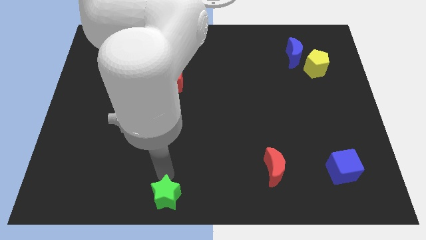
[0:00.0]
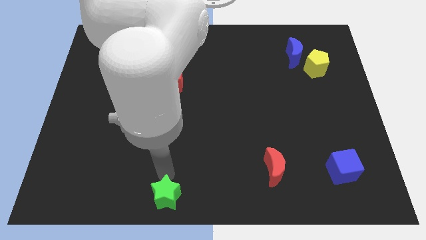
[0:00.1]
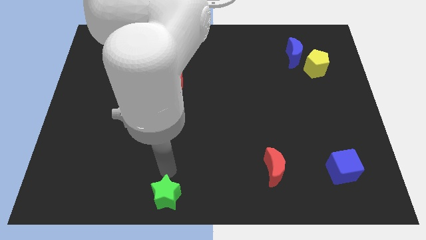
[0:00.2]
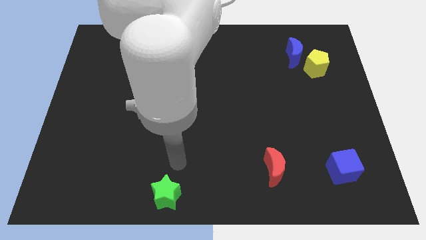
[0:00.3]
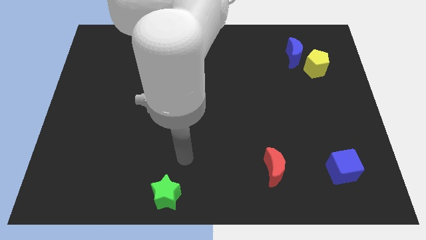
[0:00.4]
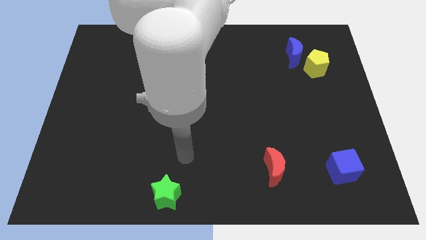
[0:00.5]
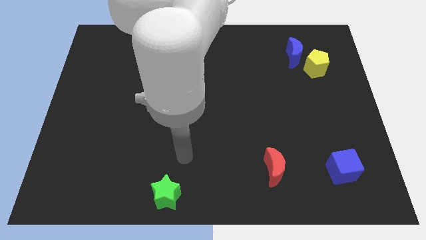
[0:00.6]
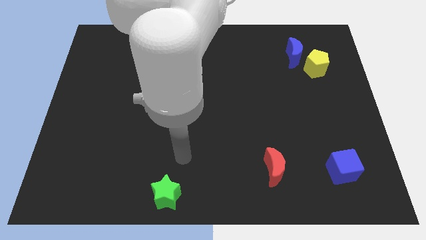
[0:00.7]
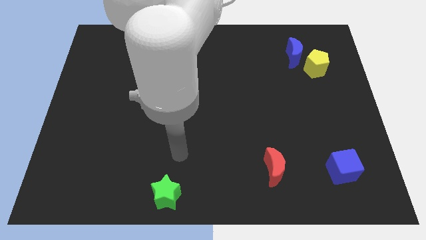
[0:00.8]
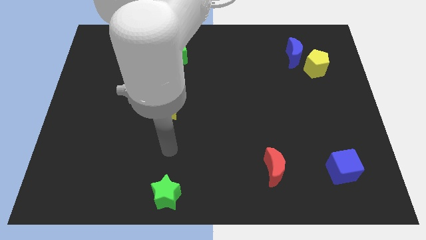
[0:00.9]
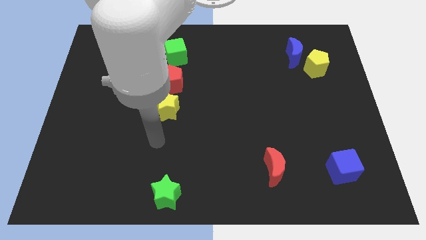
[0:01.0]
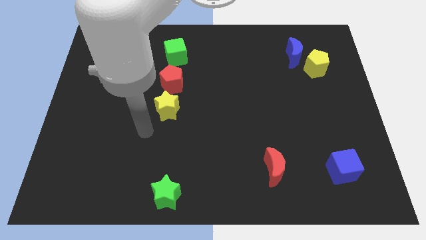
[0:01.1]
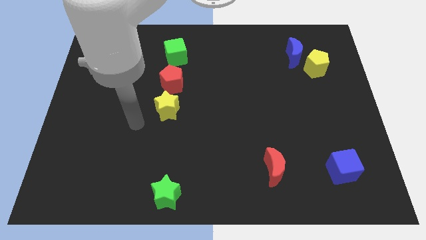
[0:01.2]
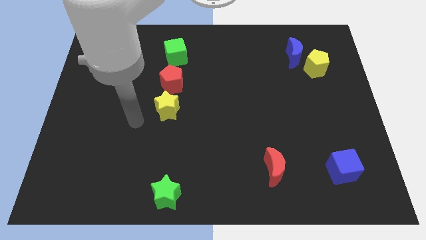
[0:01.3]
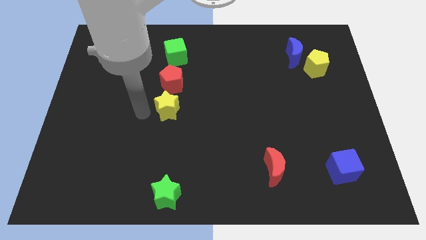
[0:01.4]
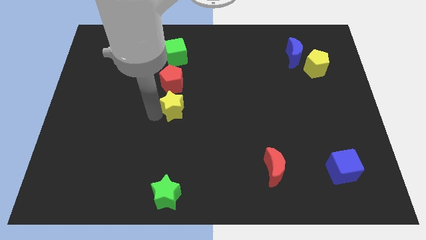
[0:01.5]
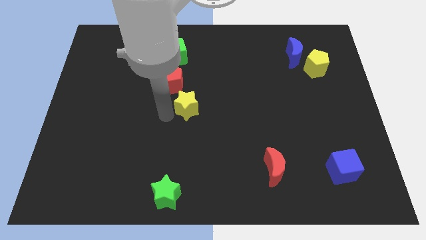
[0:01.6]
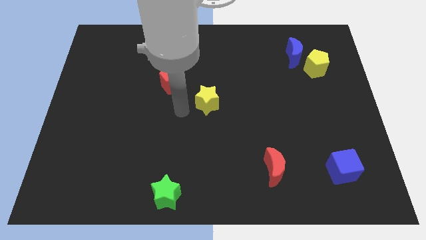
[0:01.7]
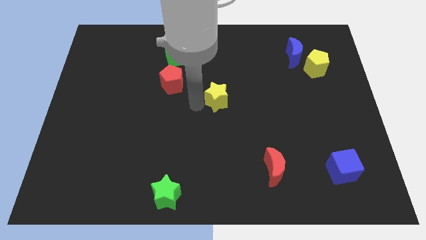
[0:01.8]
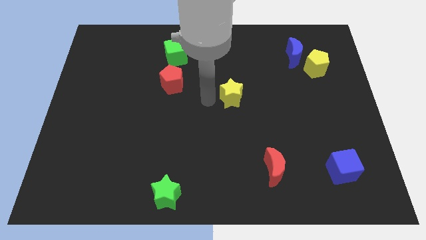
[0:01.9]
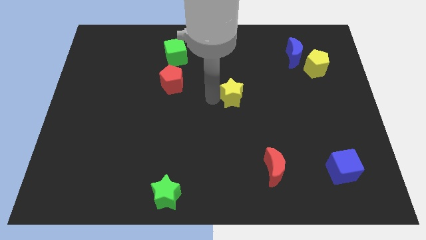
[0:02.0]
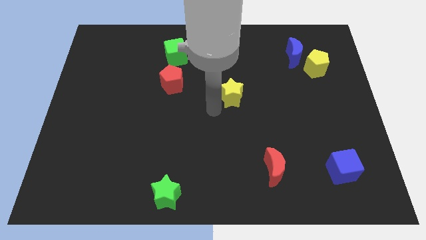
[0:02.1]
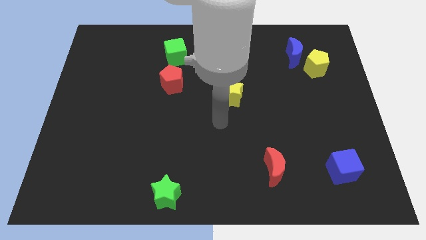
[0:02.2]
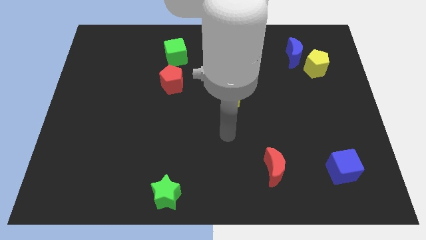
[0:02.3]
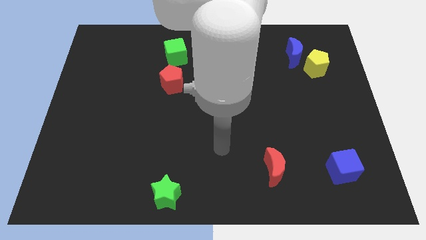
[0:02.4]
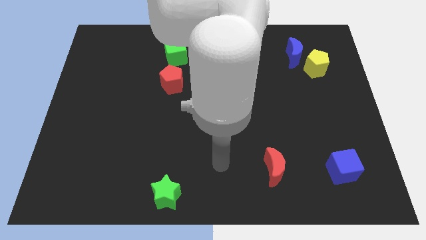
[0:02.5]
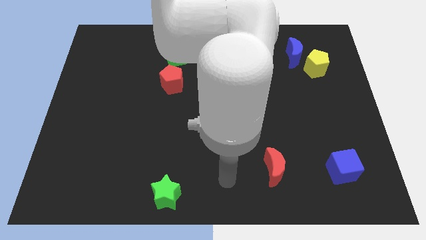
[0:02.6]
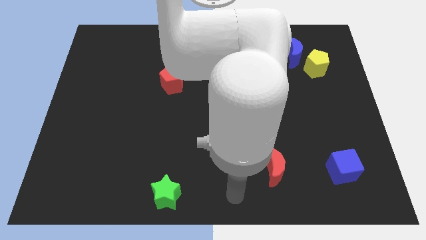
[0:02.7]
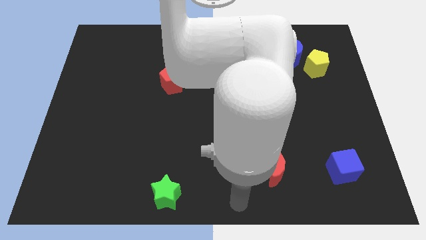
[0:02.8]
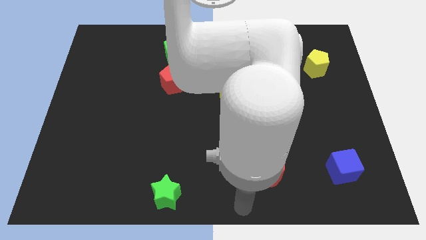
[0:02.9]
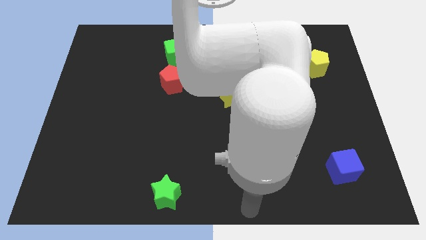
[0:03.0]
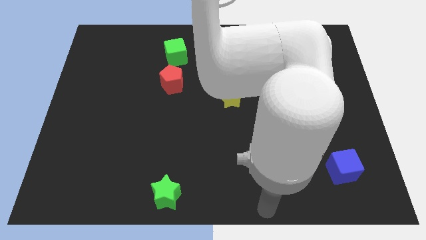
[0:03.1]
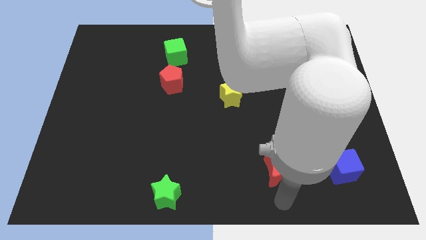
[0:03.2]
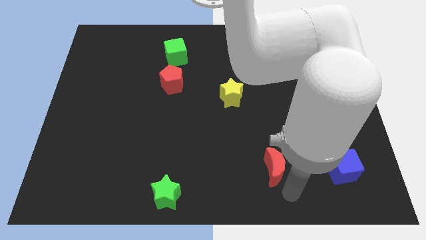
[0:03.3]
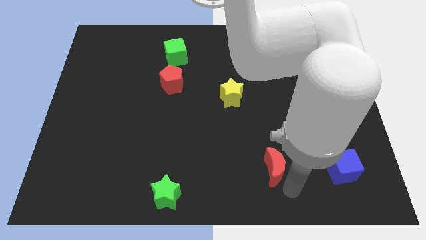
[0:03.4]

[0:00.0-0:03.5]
slide the yellow star slightly to the right

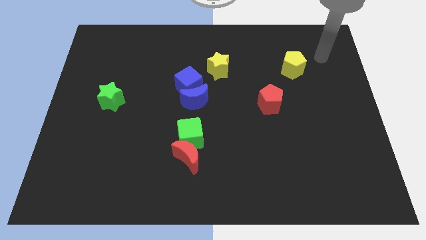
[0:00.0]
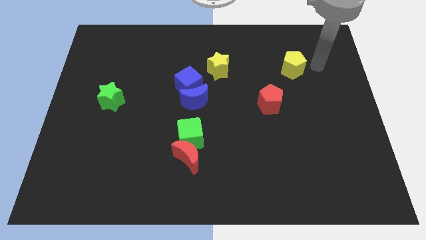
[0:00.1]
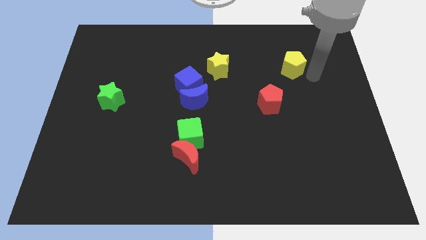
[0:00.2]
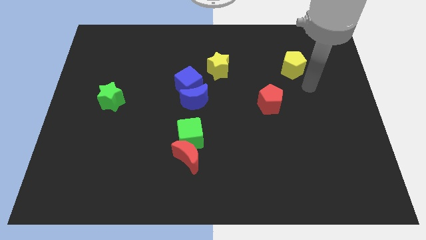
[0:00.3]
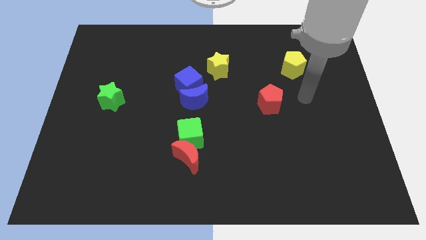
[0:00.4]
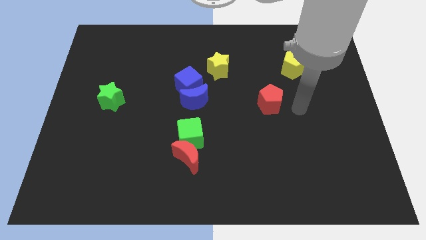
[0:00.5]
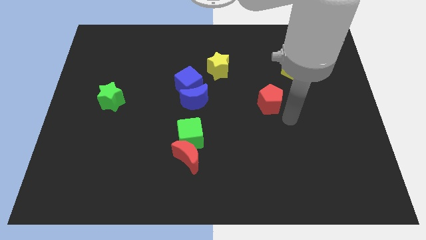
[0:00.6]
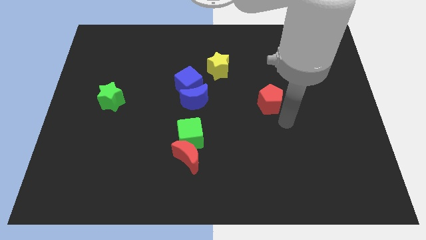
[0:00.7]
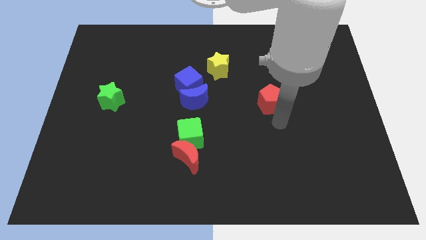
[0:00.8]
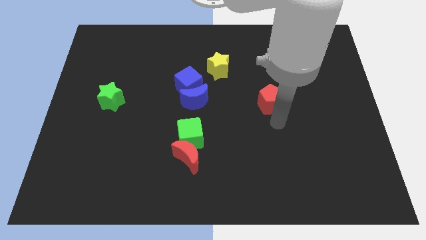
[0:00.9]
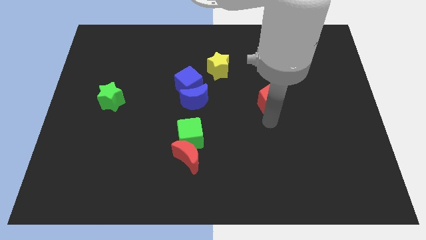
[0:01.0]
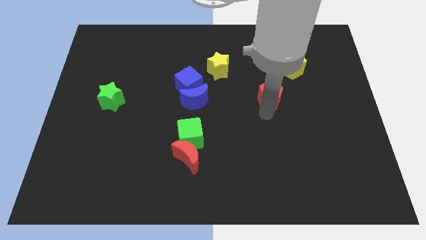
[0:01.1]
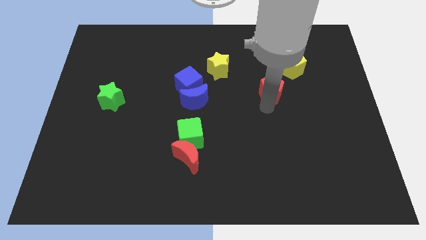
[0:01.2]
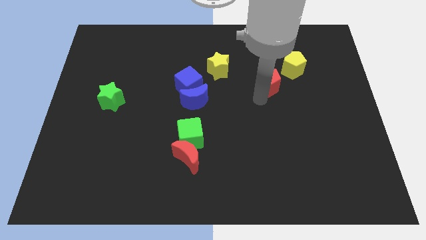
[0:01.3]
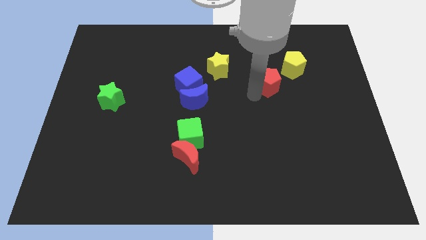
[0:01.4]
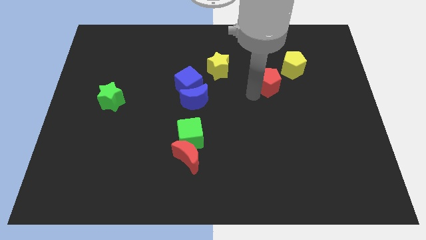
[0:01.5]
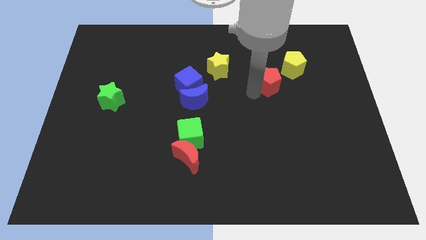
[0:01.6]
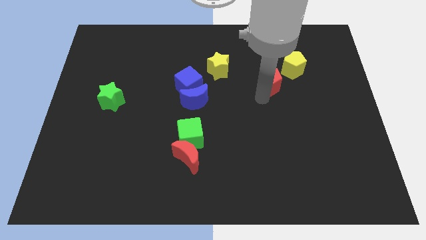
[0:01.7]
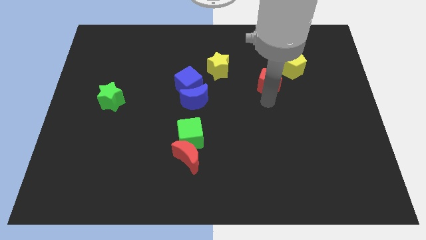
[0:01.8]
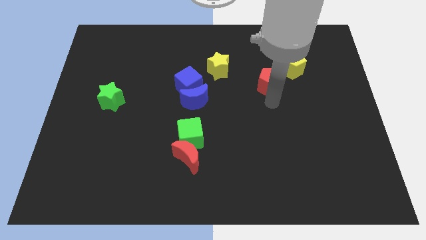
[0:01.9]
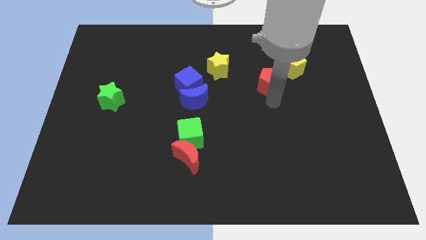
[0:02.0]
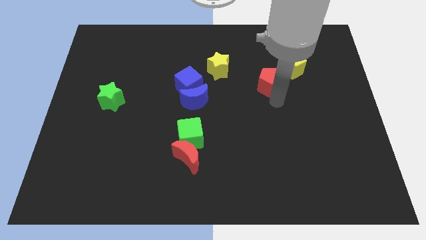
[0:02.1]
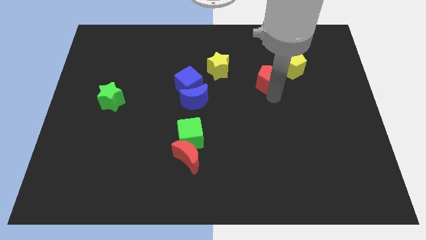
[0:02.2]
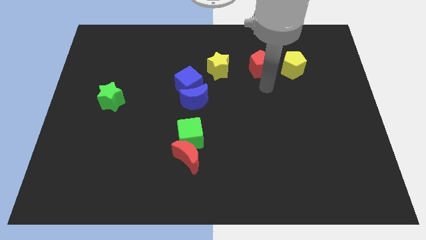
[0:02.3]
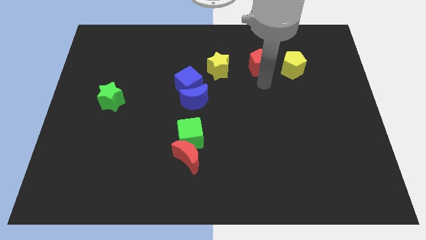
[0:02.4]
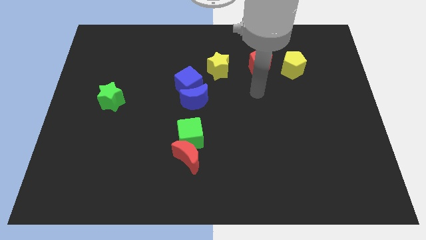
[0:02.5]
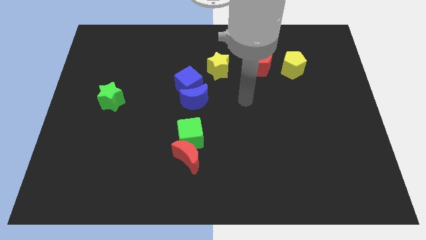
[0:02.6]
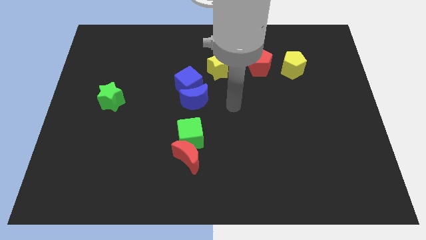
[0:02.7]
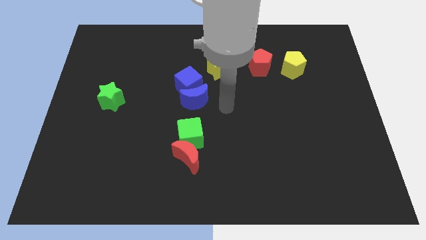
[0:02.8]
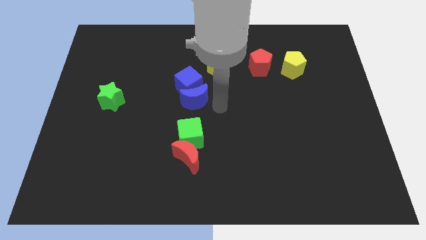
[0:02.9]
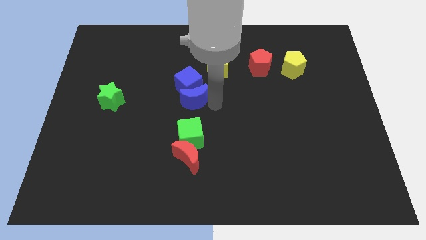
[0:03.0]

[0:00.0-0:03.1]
push the red pentagon in between yellow star and yellow pentagon

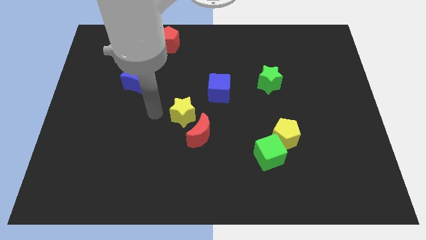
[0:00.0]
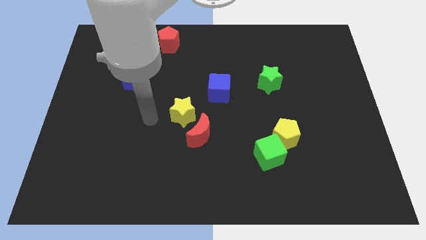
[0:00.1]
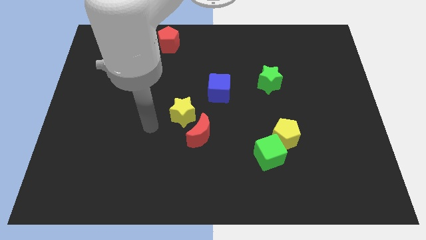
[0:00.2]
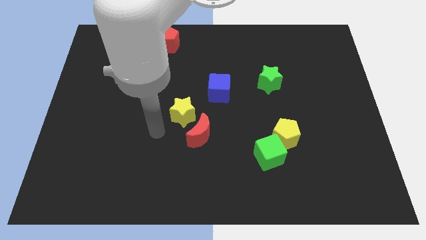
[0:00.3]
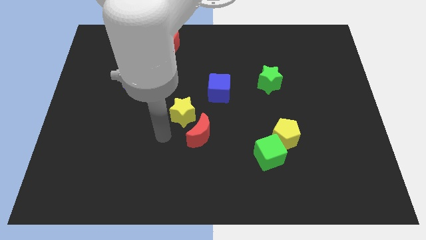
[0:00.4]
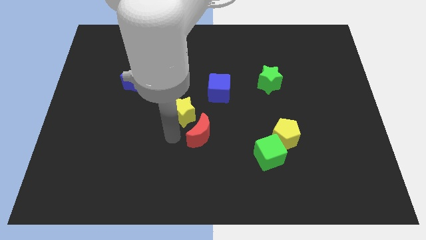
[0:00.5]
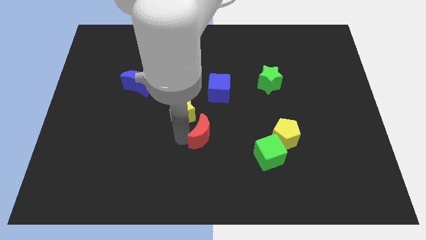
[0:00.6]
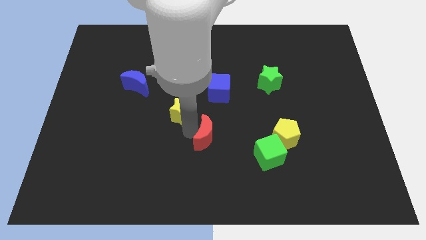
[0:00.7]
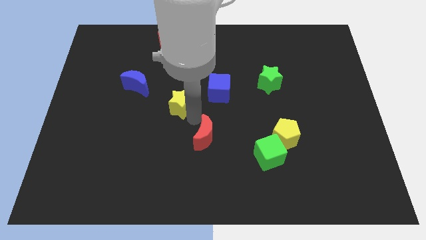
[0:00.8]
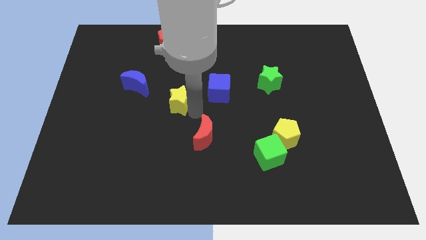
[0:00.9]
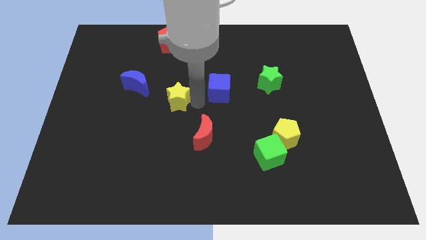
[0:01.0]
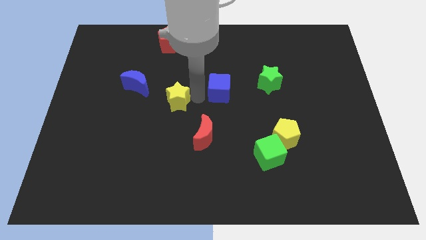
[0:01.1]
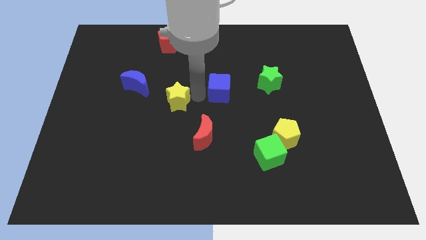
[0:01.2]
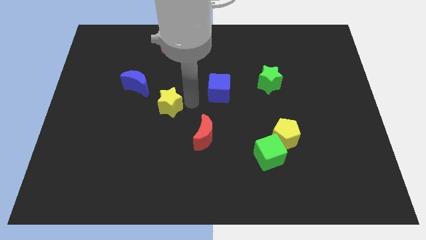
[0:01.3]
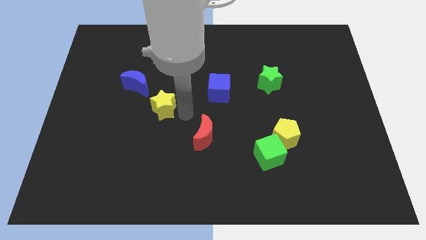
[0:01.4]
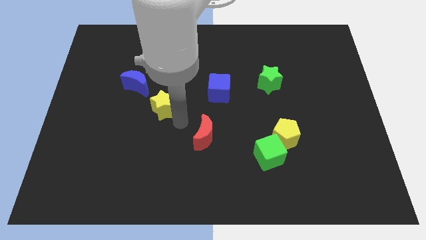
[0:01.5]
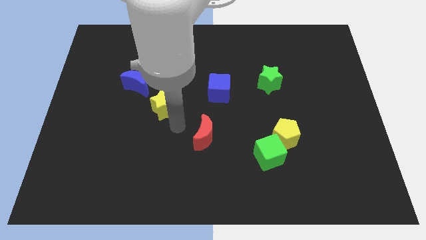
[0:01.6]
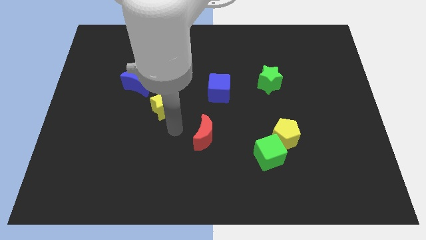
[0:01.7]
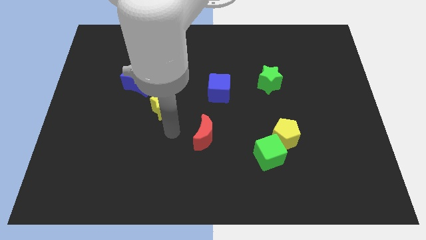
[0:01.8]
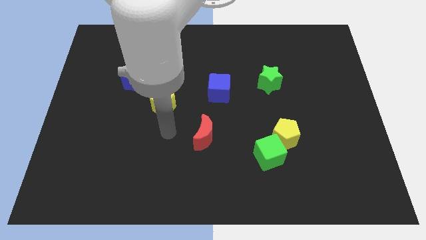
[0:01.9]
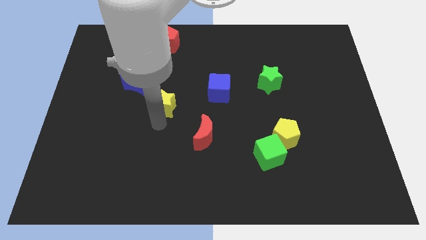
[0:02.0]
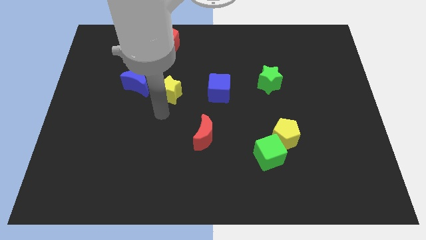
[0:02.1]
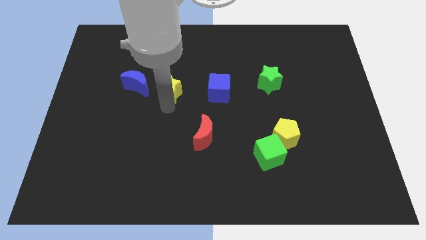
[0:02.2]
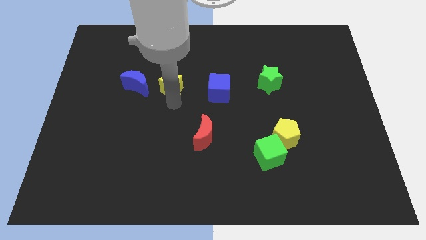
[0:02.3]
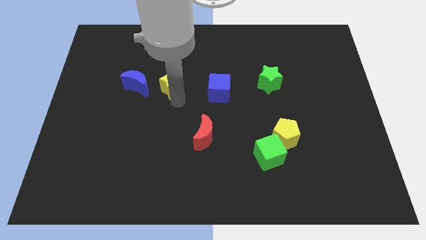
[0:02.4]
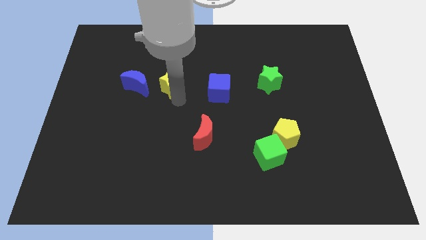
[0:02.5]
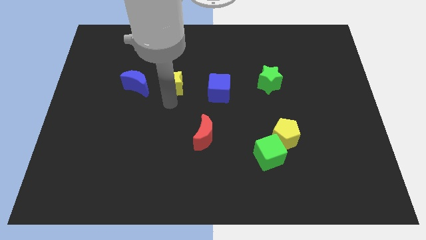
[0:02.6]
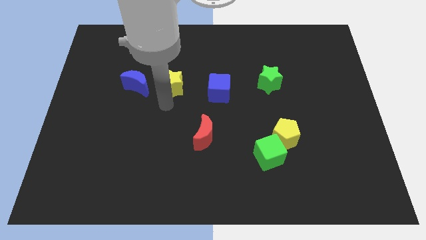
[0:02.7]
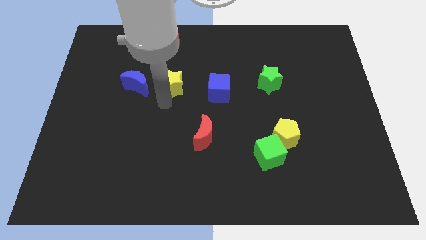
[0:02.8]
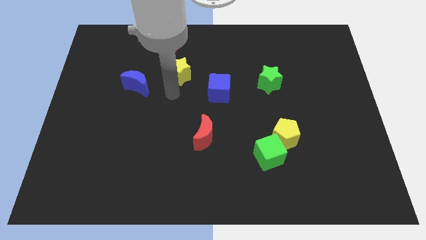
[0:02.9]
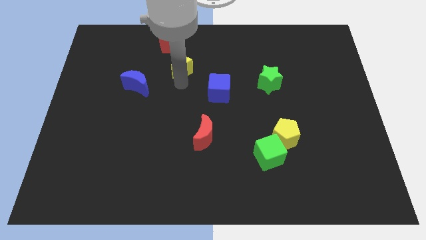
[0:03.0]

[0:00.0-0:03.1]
move the yellow star towards the red pentagon
